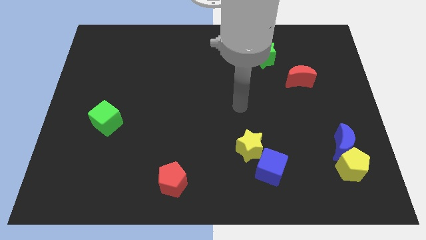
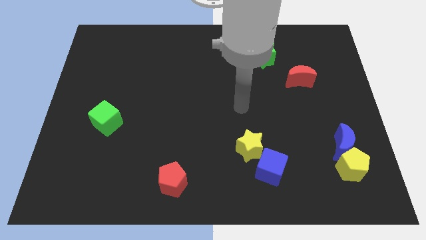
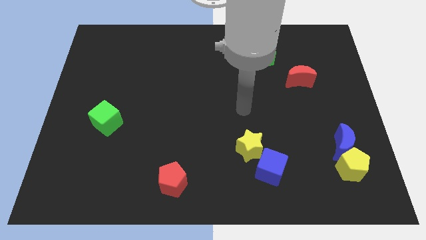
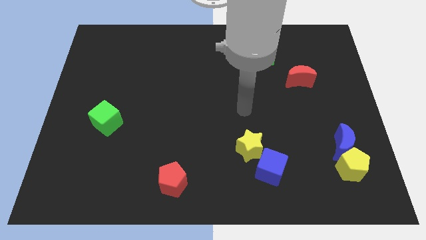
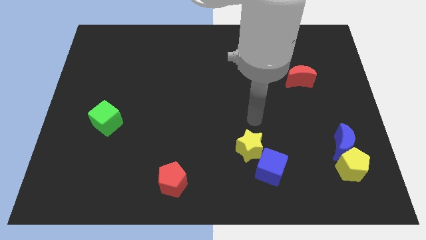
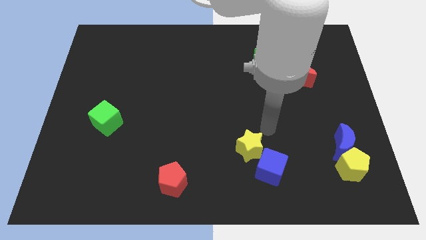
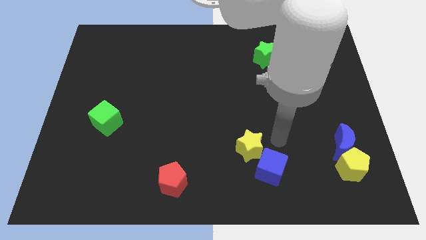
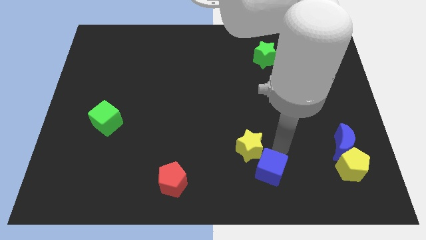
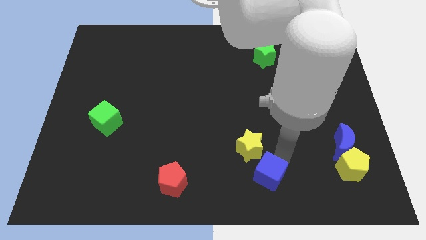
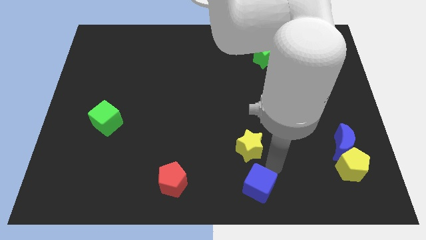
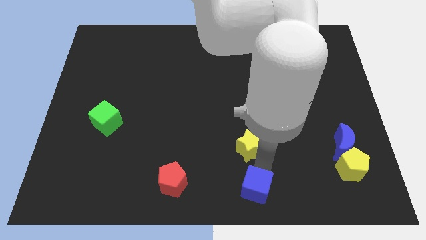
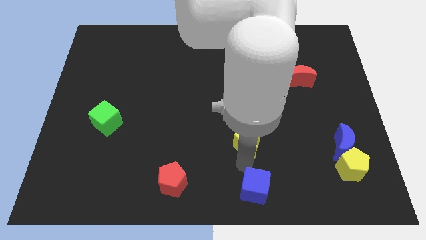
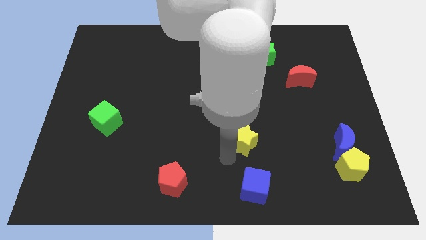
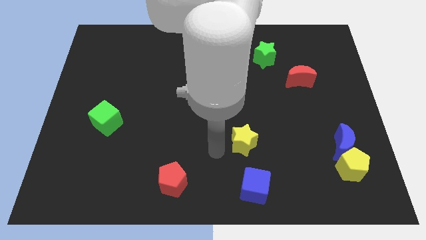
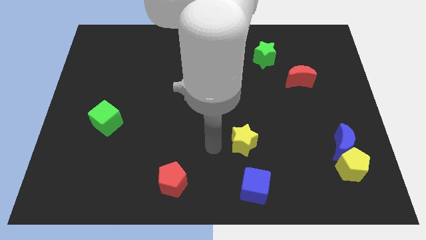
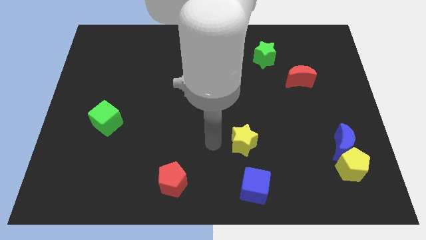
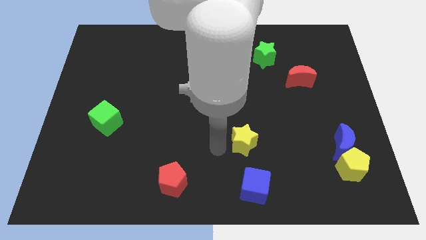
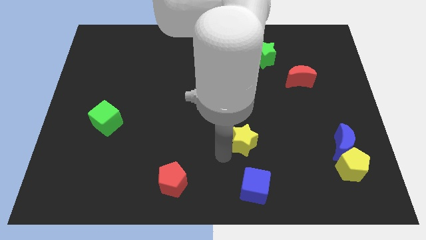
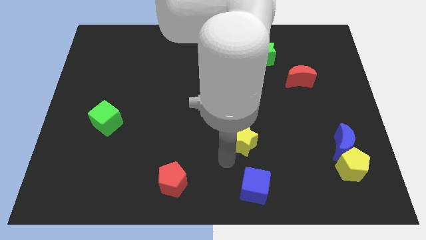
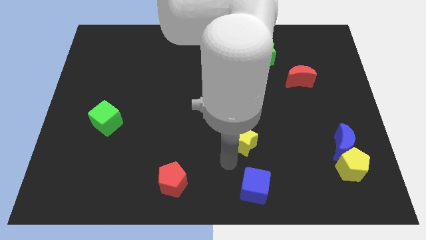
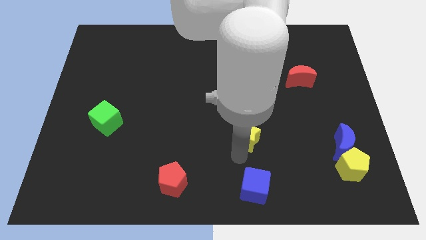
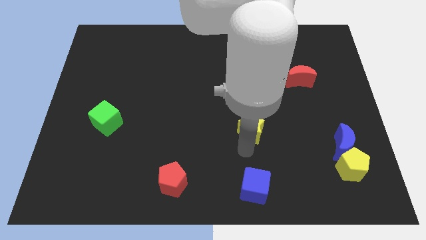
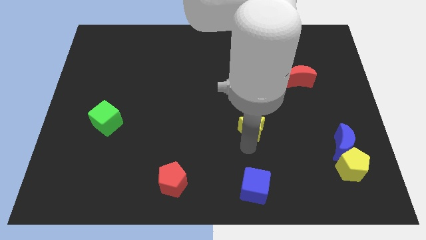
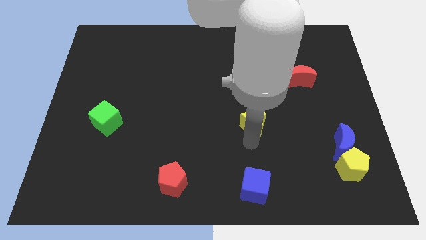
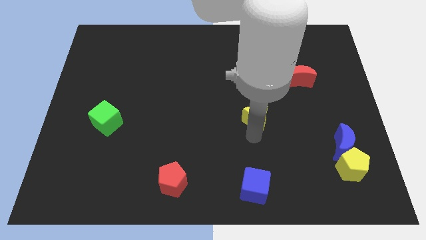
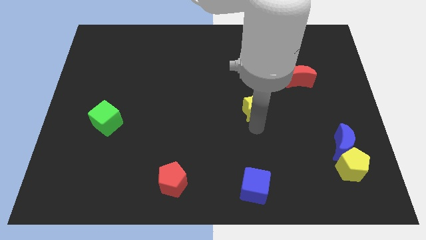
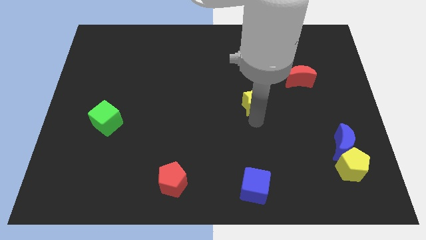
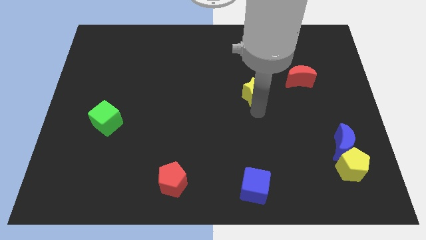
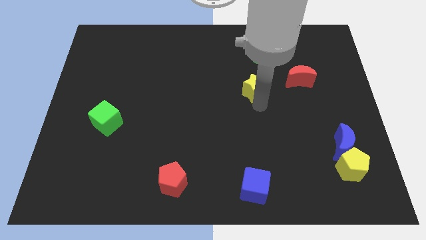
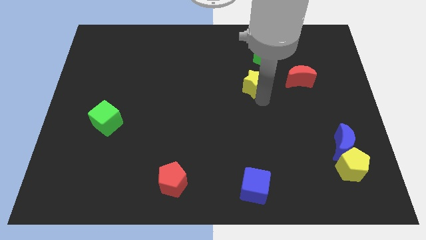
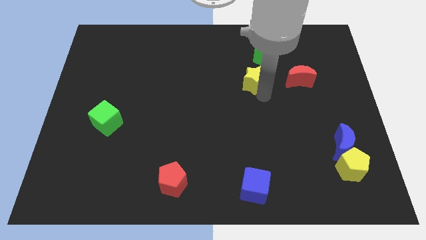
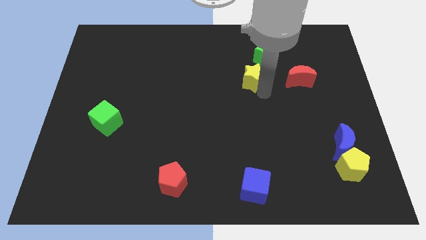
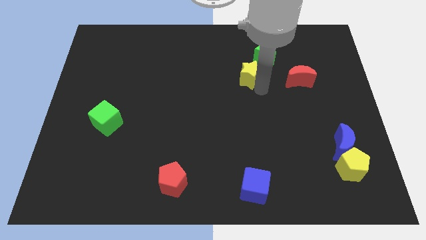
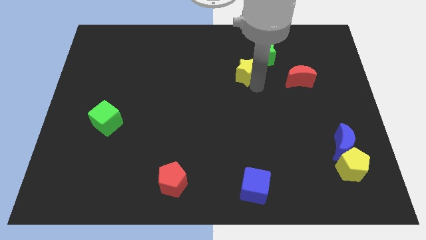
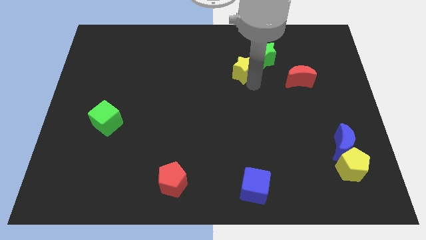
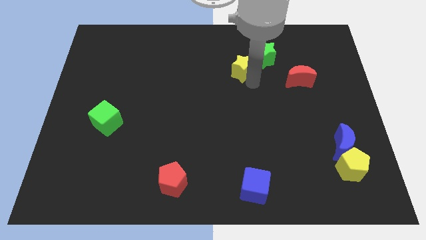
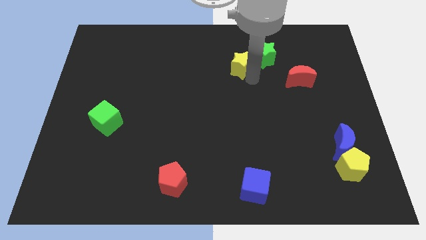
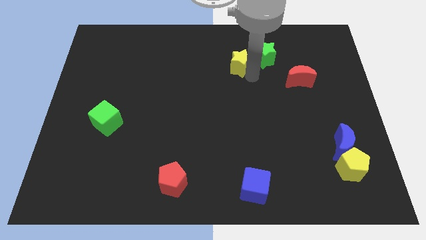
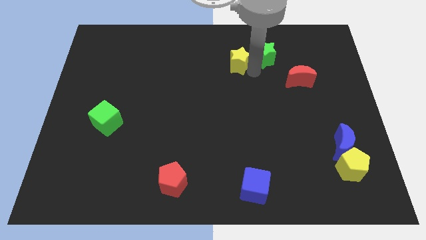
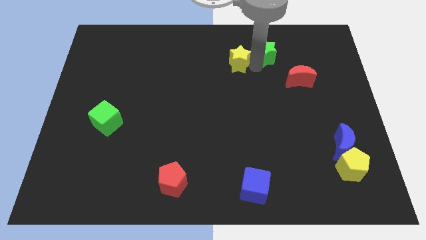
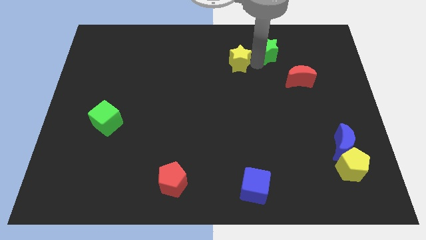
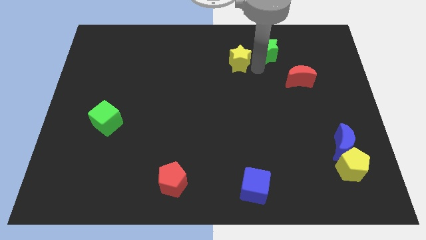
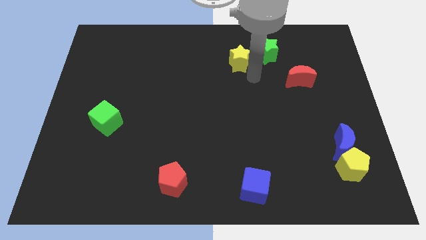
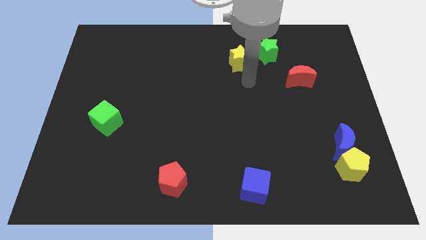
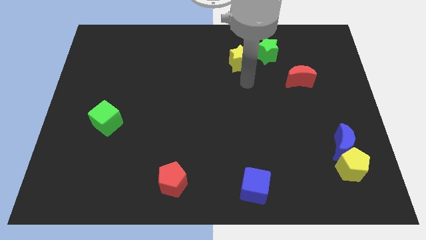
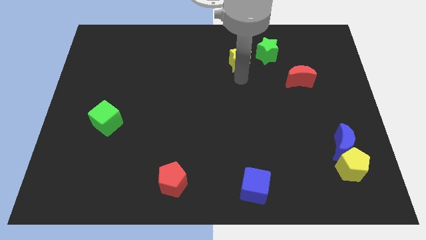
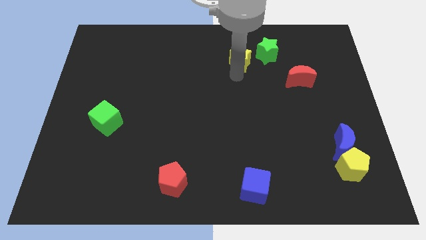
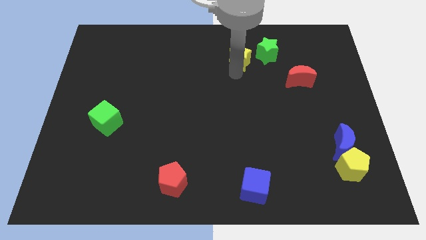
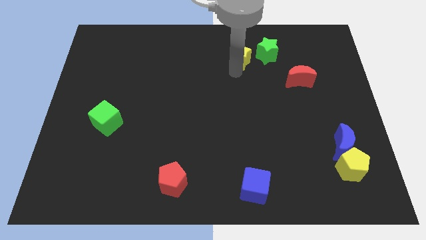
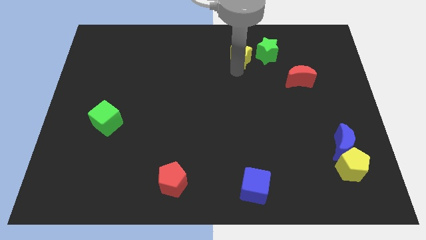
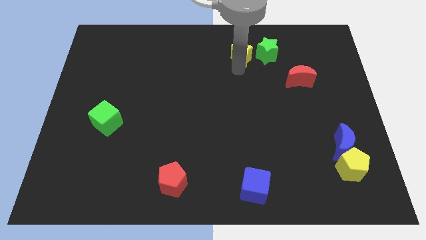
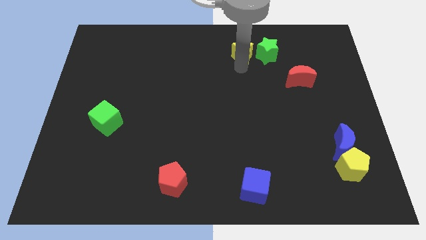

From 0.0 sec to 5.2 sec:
move yellow star to the left of green star

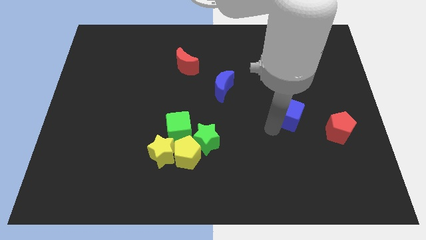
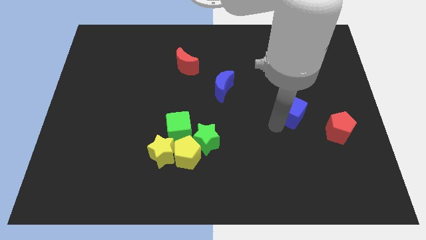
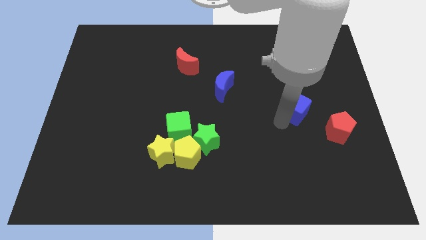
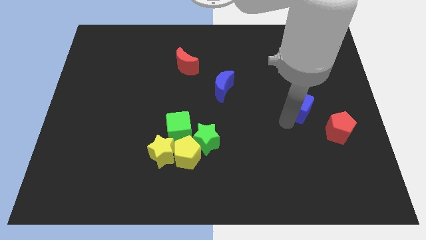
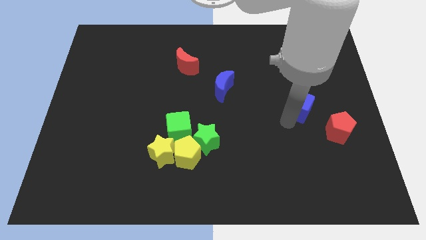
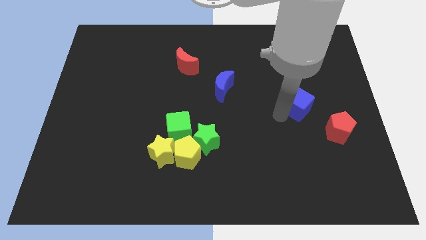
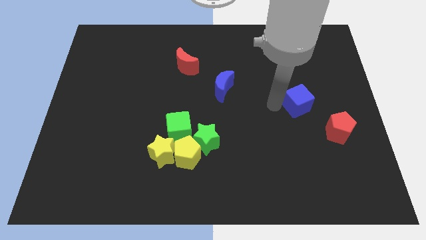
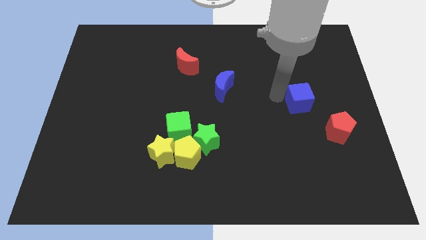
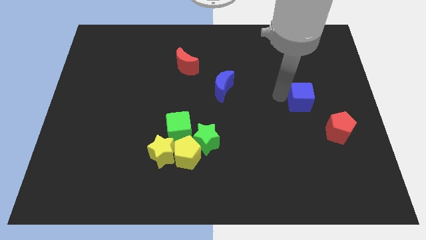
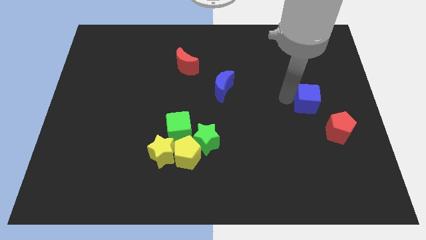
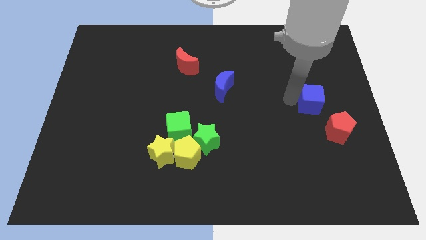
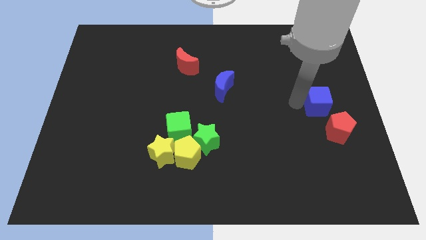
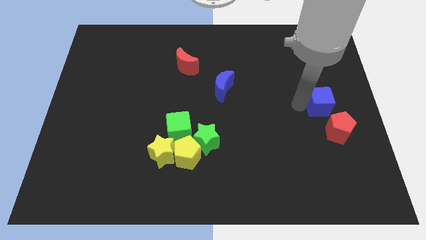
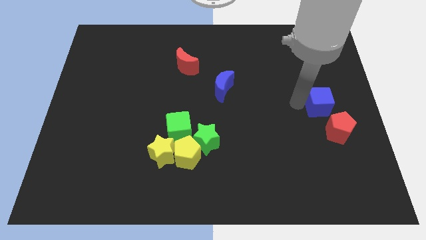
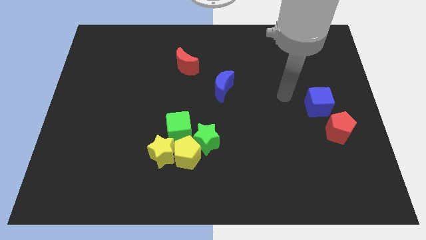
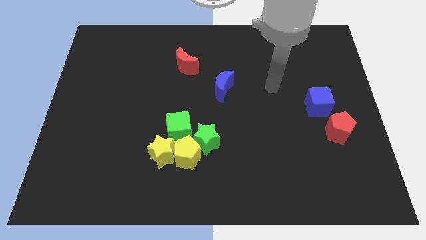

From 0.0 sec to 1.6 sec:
move the blue cube close to the red pentagon

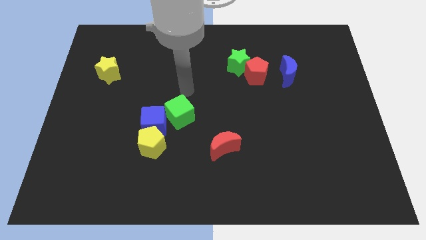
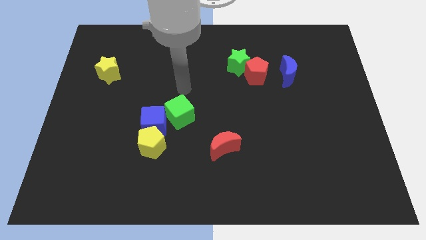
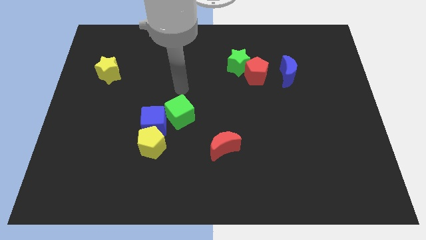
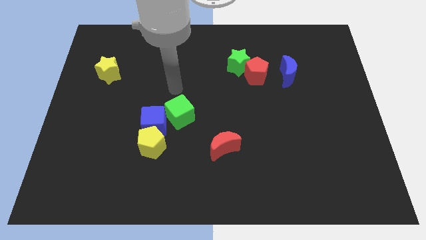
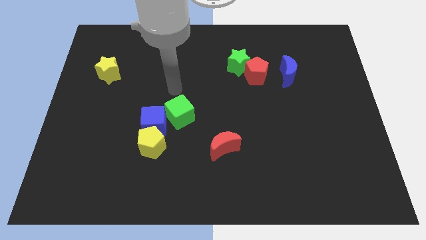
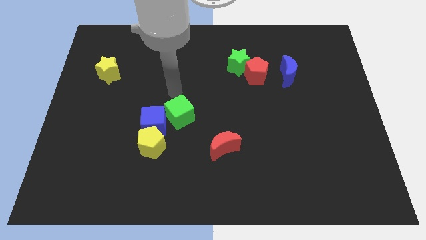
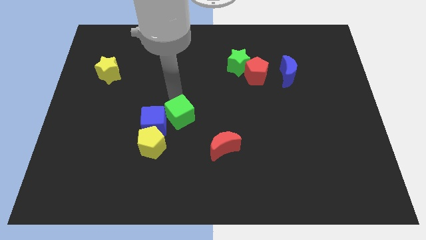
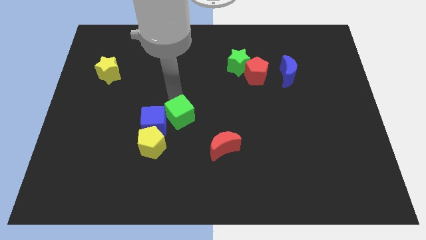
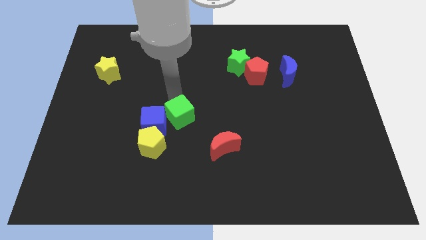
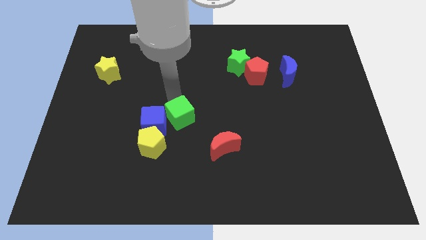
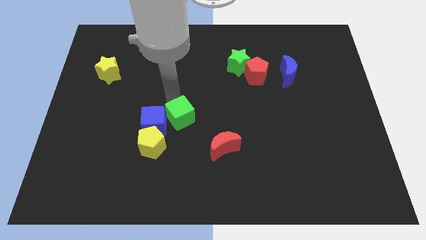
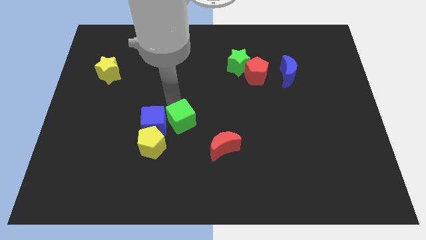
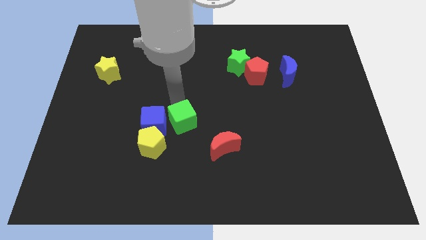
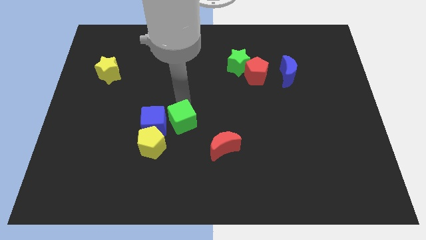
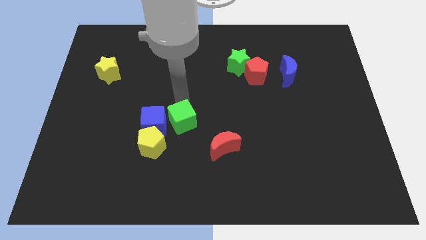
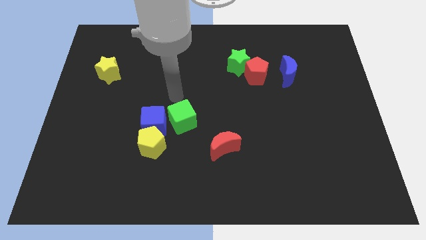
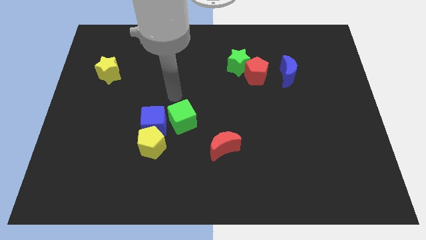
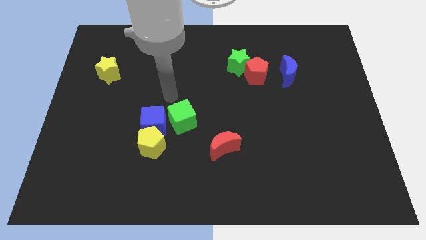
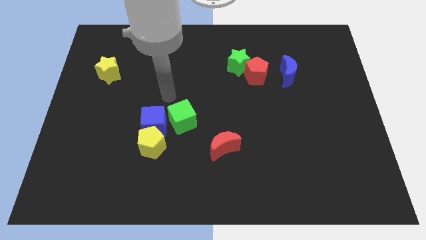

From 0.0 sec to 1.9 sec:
move the green cube slightly to the down

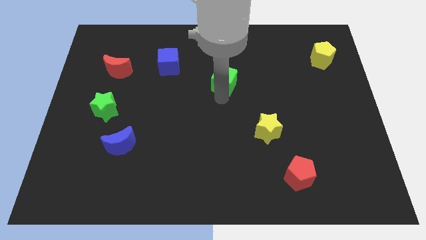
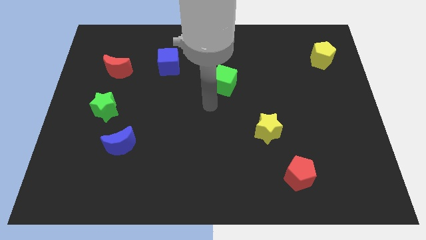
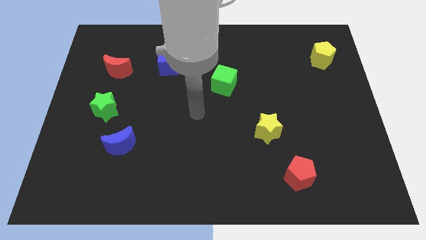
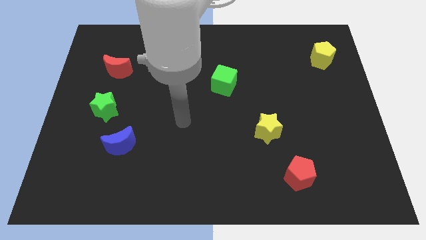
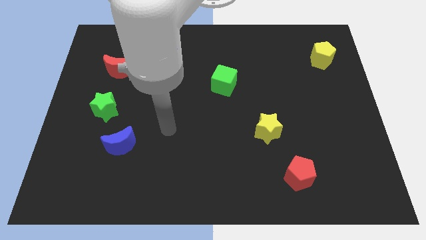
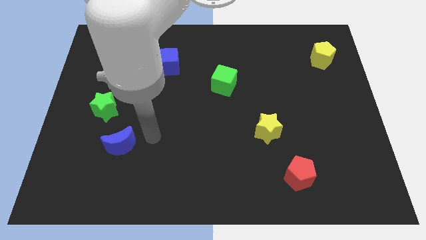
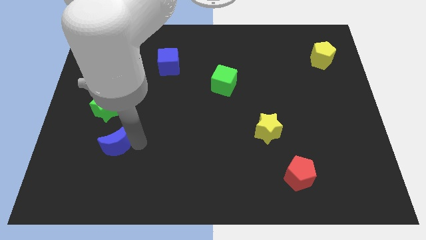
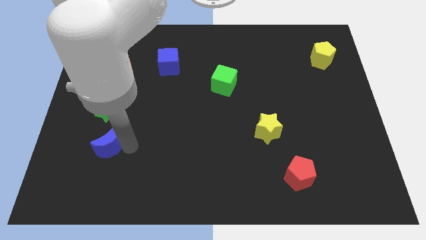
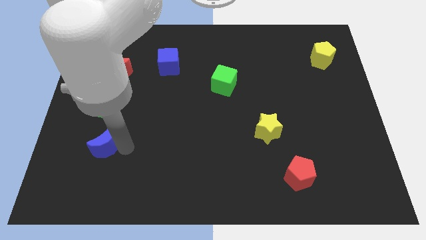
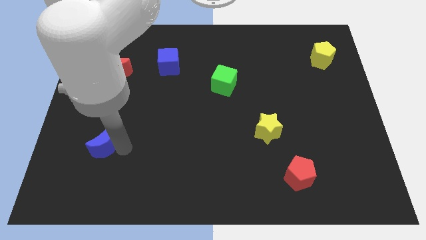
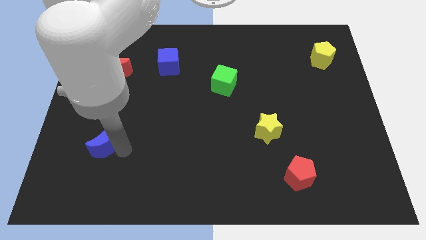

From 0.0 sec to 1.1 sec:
slightly push the blue crescent slightly to the left side of the board
